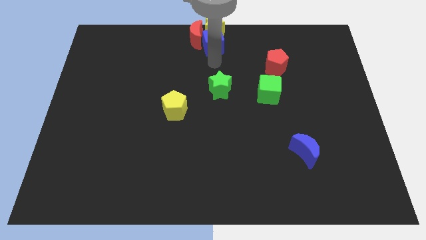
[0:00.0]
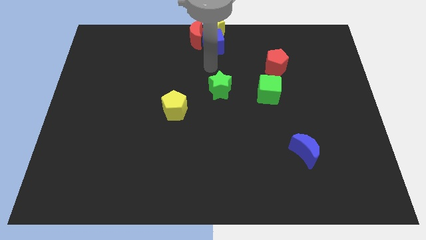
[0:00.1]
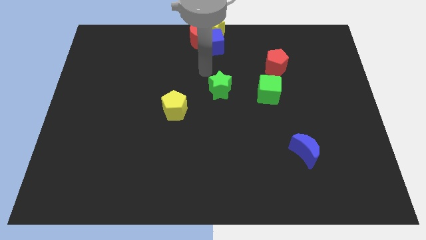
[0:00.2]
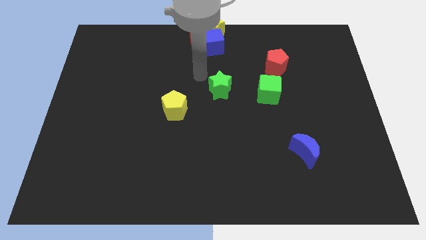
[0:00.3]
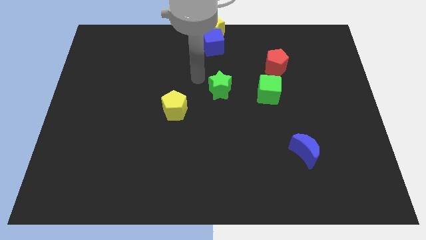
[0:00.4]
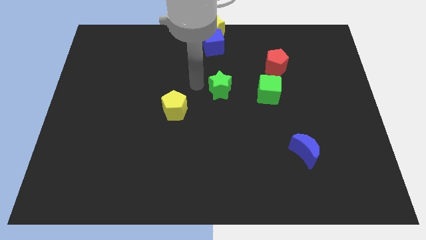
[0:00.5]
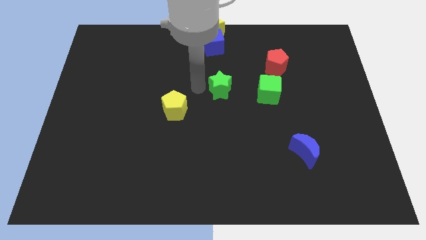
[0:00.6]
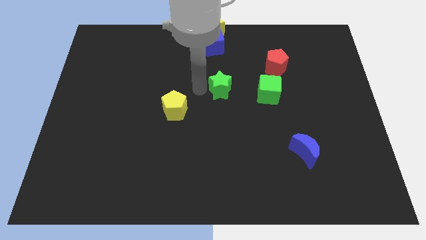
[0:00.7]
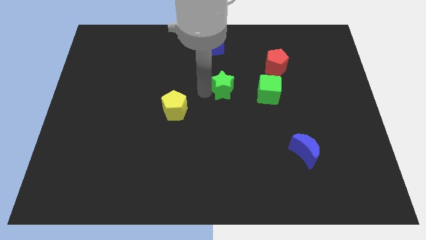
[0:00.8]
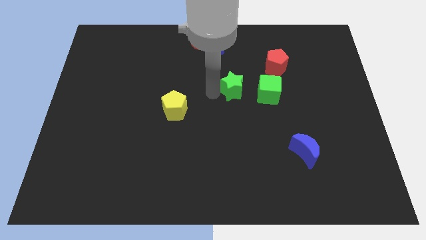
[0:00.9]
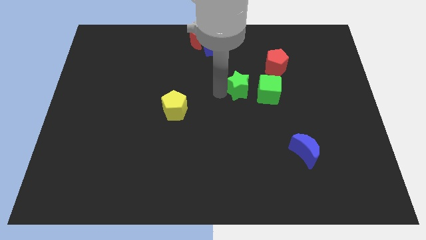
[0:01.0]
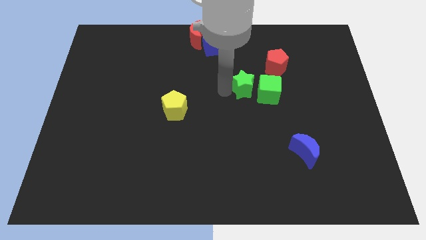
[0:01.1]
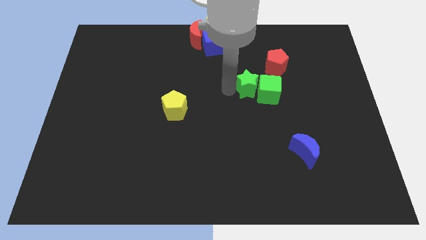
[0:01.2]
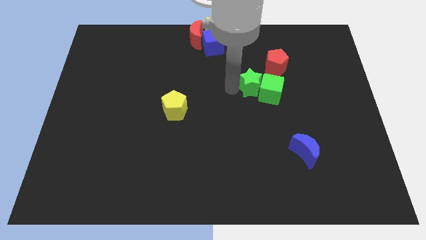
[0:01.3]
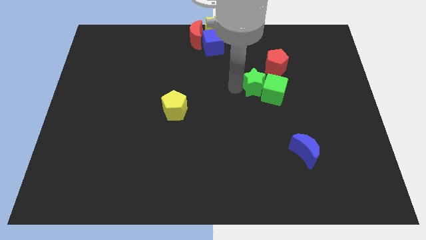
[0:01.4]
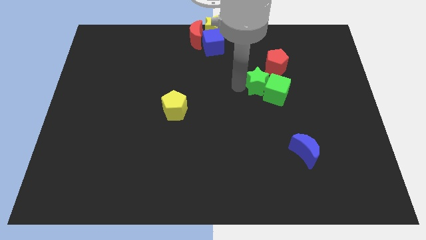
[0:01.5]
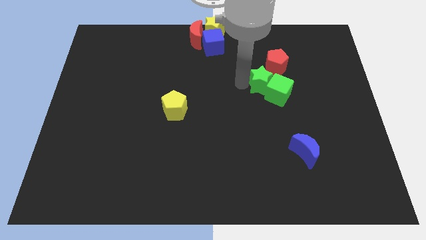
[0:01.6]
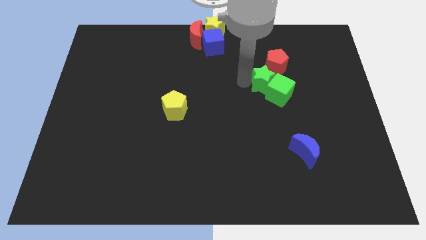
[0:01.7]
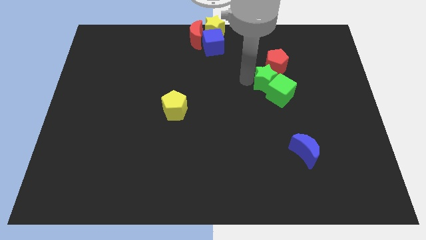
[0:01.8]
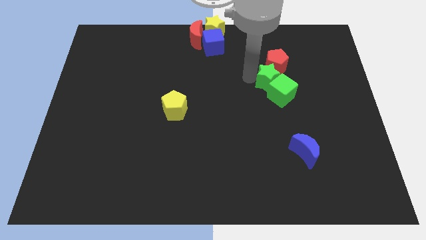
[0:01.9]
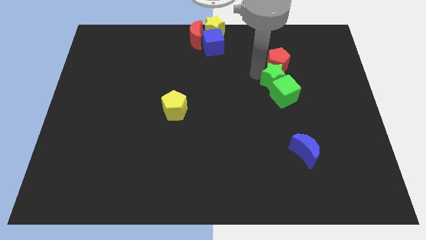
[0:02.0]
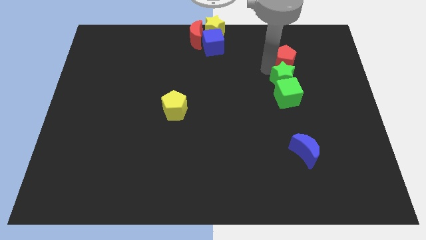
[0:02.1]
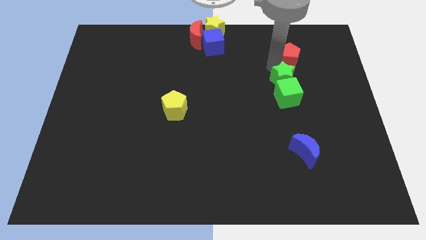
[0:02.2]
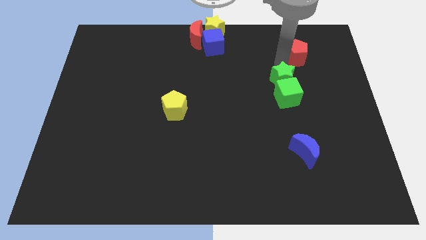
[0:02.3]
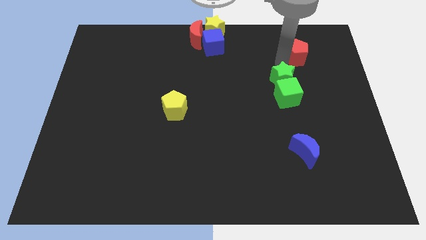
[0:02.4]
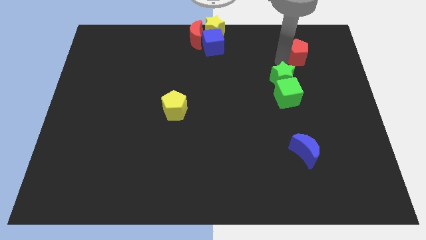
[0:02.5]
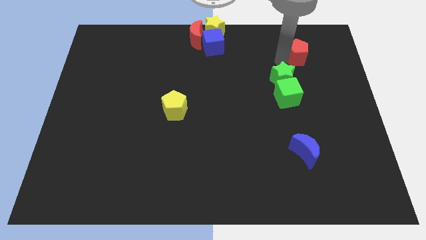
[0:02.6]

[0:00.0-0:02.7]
push green star into green cube

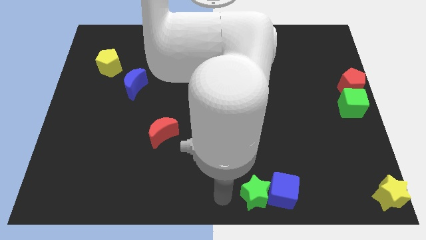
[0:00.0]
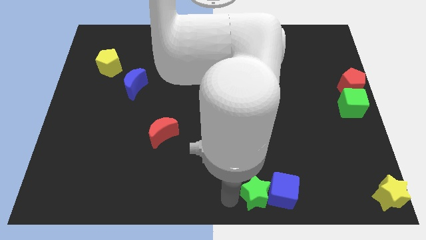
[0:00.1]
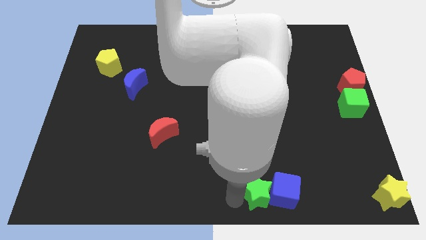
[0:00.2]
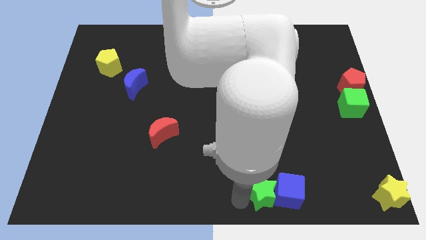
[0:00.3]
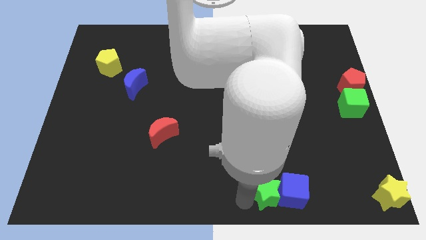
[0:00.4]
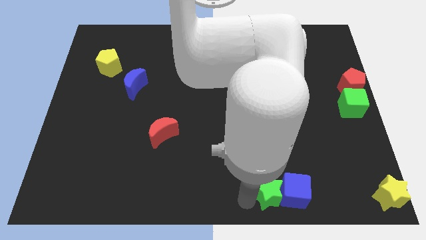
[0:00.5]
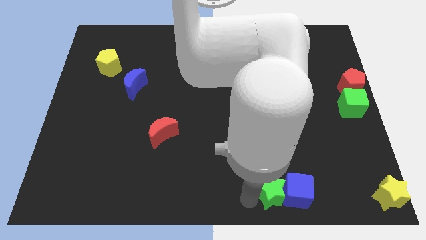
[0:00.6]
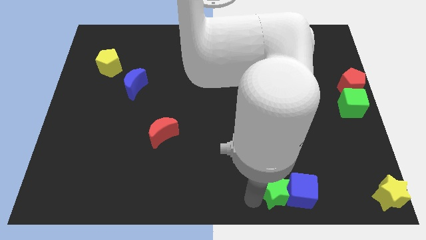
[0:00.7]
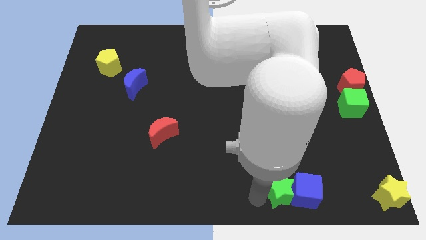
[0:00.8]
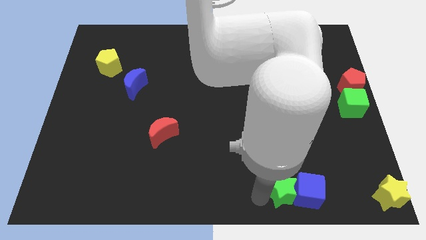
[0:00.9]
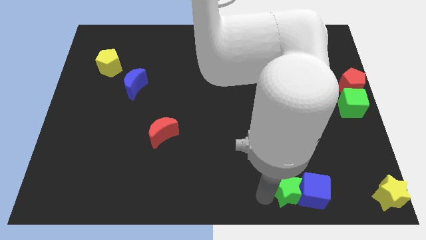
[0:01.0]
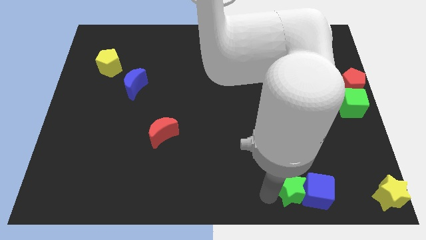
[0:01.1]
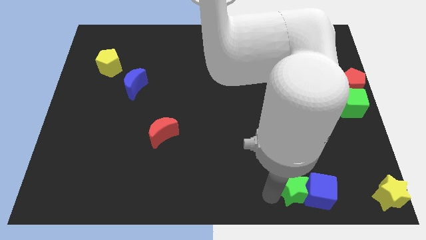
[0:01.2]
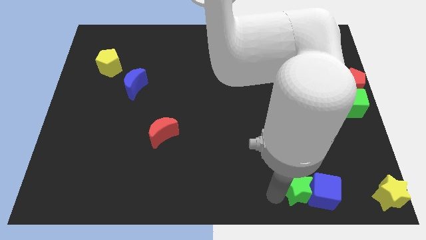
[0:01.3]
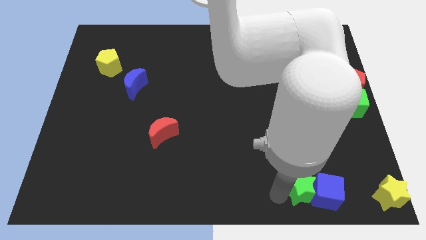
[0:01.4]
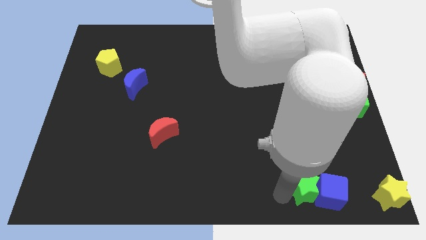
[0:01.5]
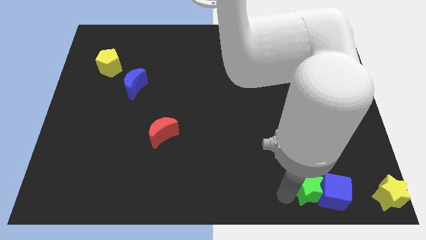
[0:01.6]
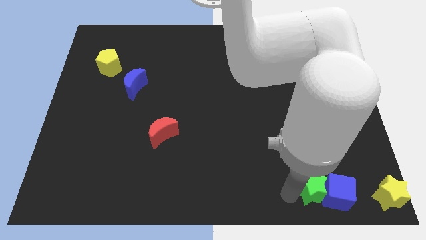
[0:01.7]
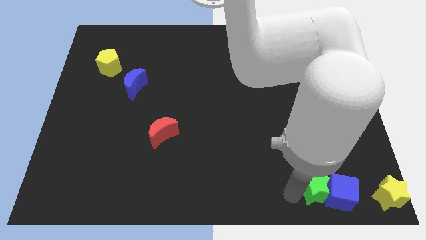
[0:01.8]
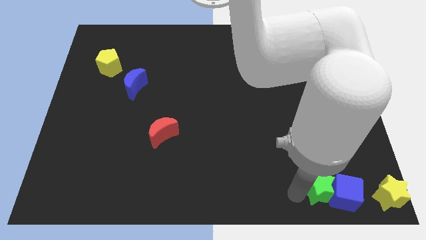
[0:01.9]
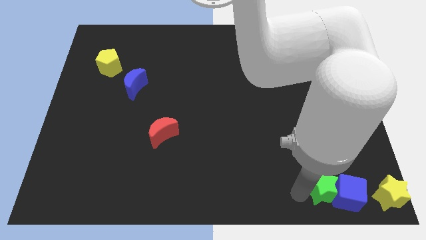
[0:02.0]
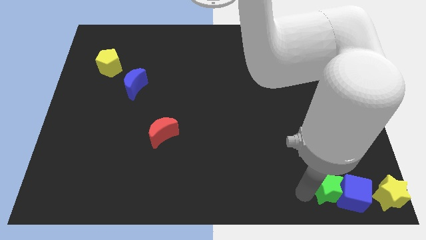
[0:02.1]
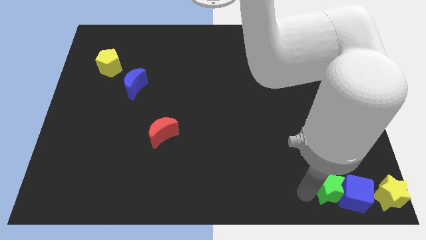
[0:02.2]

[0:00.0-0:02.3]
drag the green star and blue cube towards the yellow star

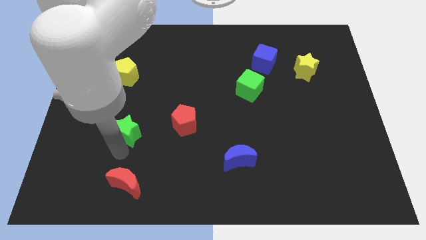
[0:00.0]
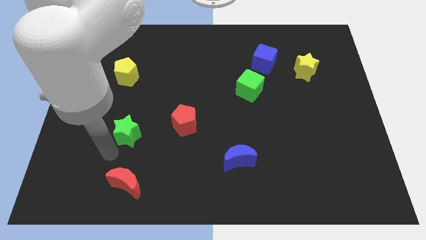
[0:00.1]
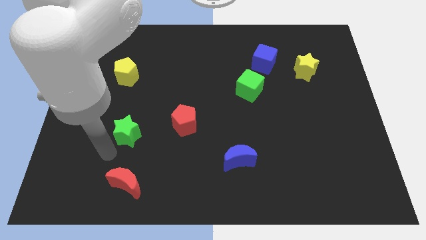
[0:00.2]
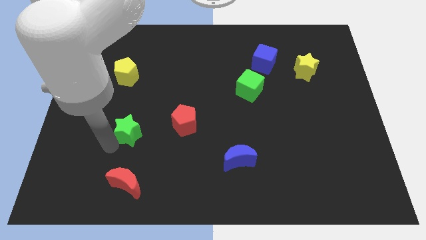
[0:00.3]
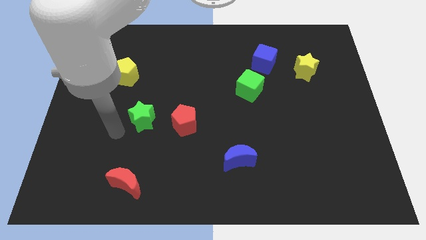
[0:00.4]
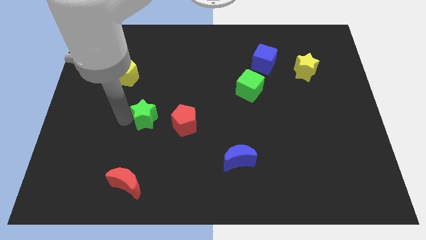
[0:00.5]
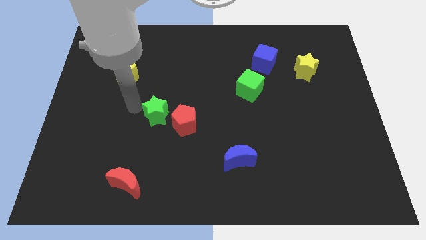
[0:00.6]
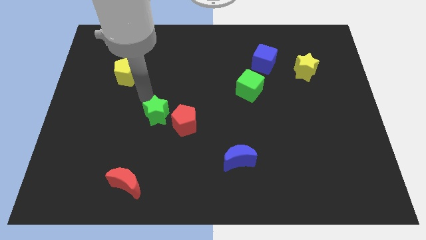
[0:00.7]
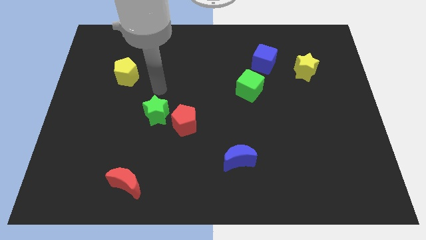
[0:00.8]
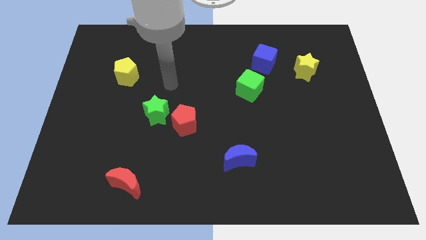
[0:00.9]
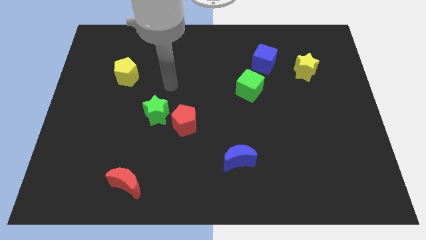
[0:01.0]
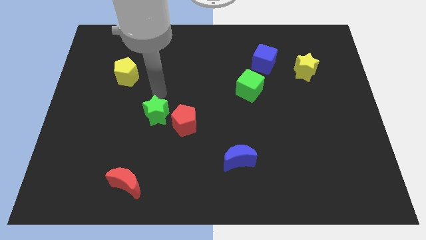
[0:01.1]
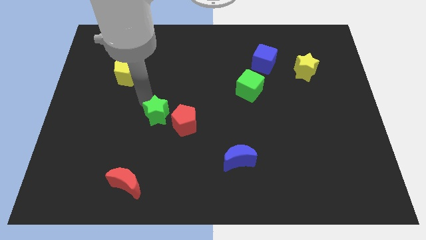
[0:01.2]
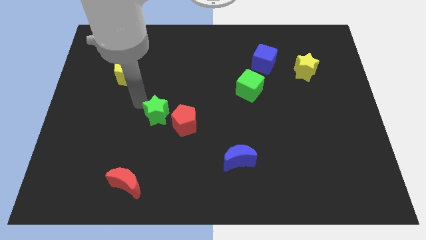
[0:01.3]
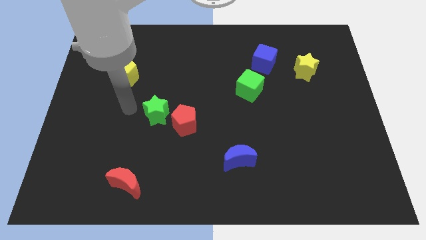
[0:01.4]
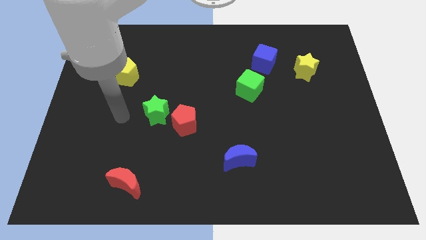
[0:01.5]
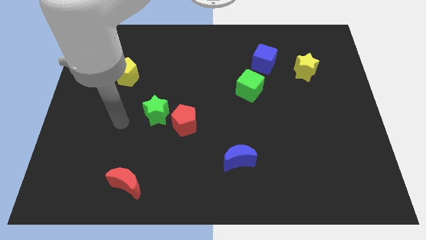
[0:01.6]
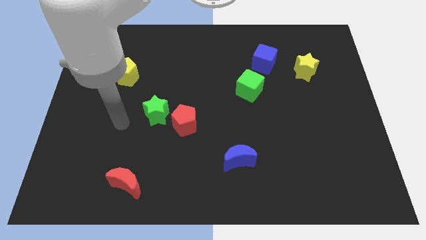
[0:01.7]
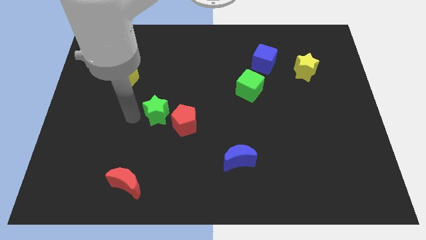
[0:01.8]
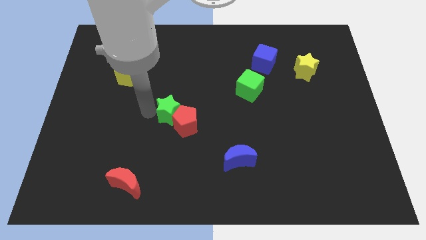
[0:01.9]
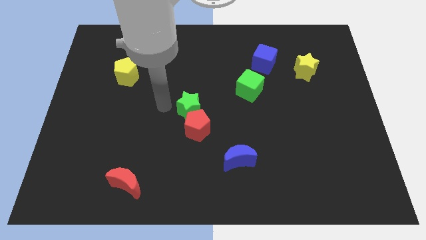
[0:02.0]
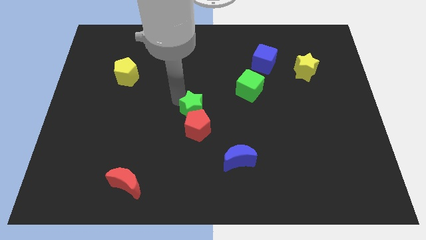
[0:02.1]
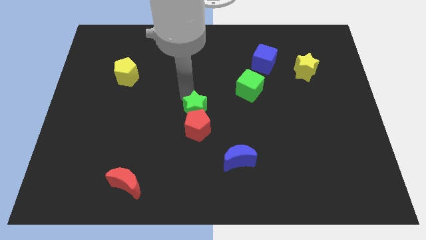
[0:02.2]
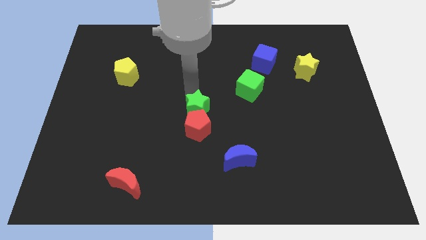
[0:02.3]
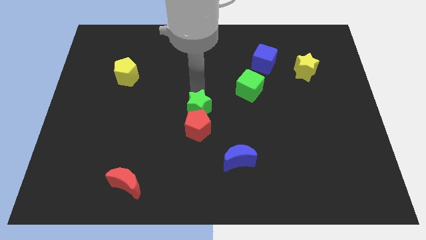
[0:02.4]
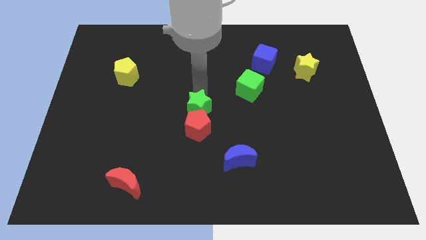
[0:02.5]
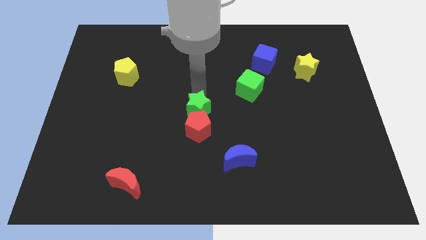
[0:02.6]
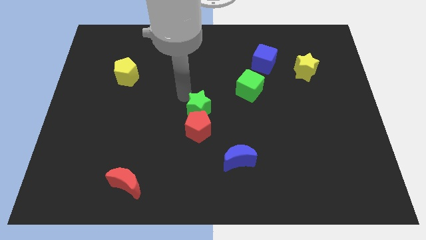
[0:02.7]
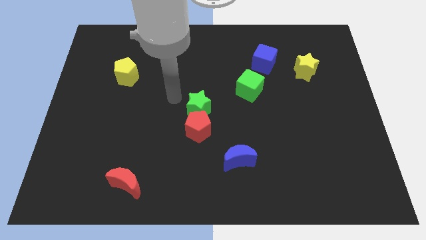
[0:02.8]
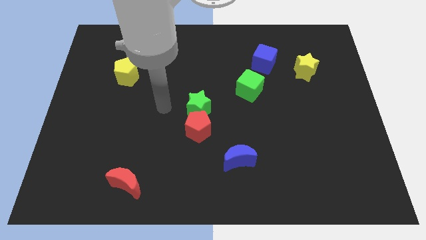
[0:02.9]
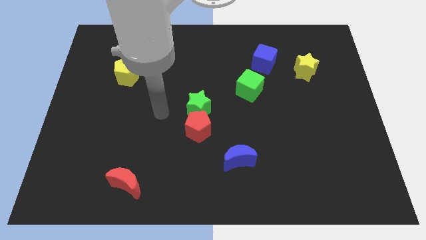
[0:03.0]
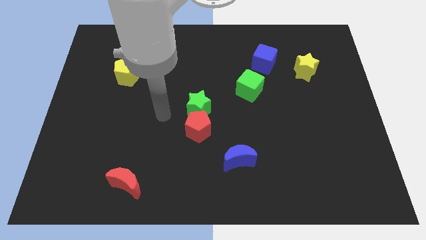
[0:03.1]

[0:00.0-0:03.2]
place the green star and red pentagon at the center of the board

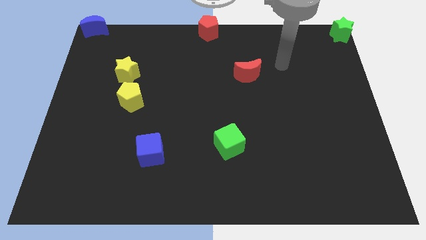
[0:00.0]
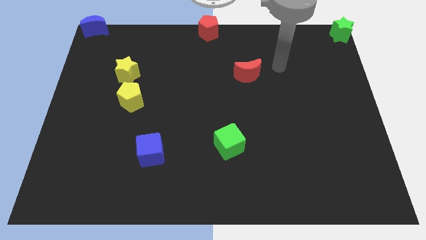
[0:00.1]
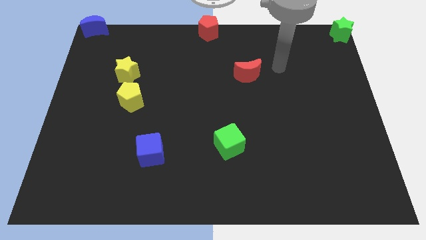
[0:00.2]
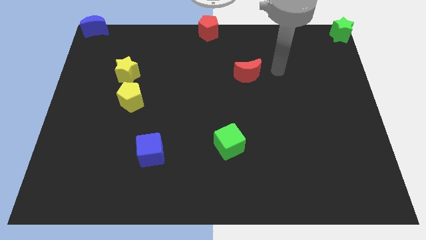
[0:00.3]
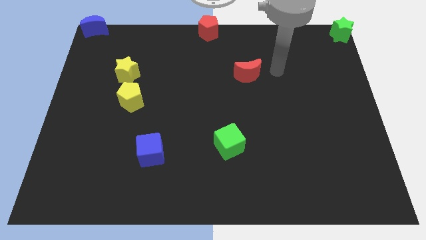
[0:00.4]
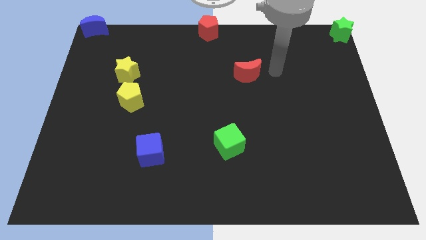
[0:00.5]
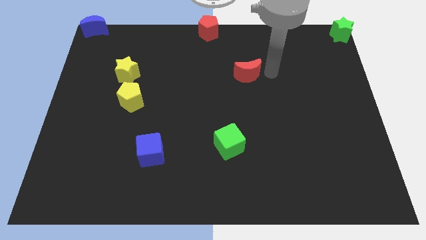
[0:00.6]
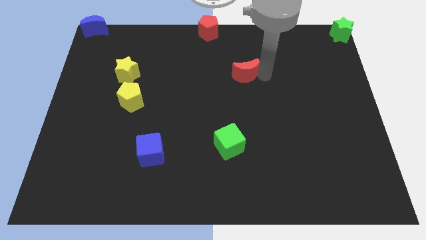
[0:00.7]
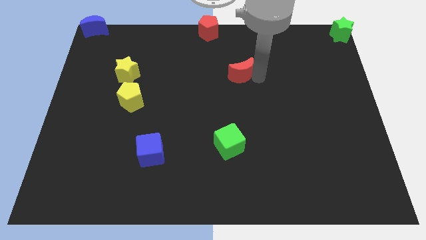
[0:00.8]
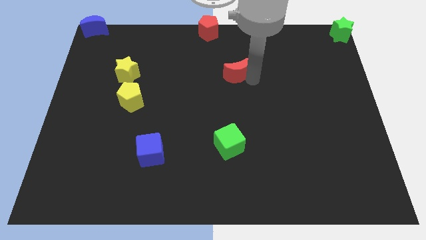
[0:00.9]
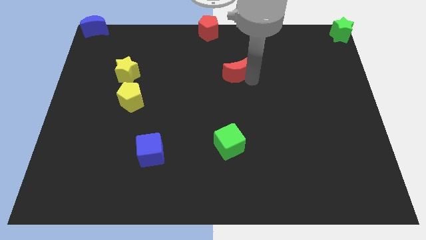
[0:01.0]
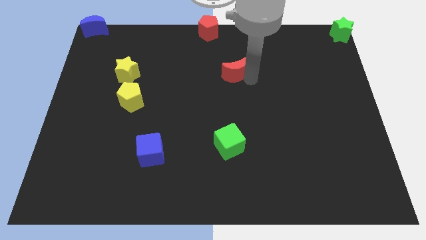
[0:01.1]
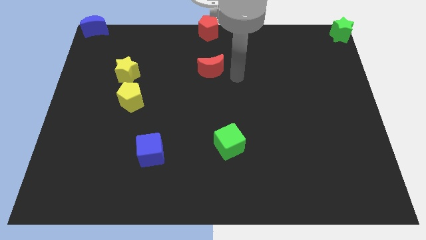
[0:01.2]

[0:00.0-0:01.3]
put the red crescent below the red pentagon
